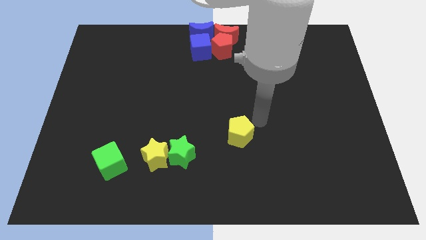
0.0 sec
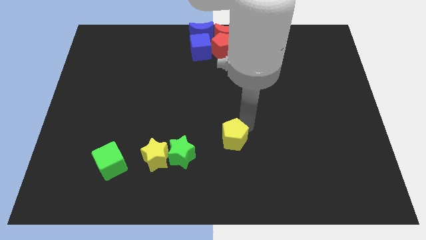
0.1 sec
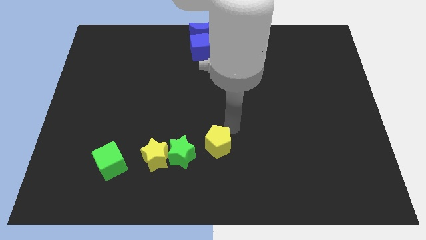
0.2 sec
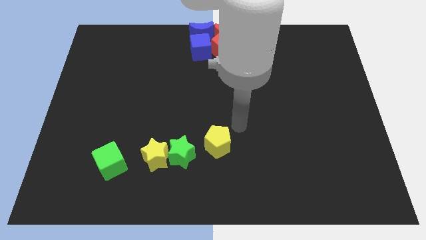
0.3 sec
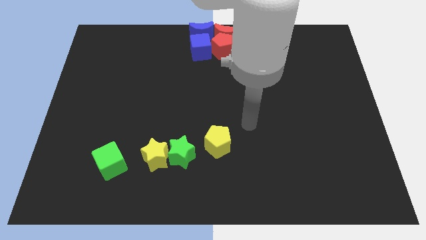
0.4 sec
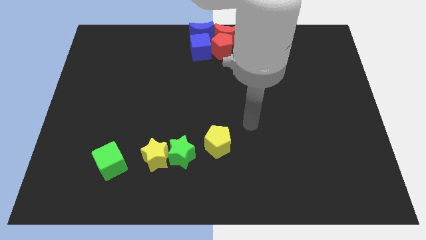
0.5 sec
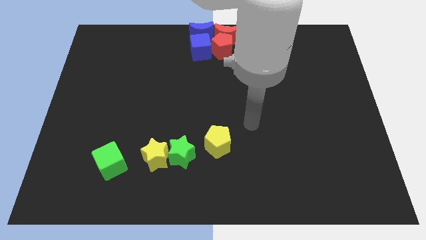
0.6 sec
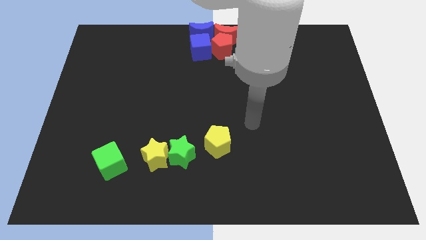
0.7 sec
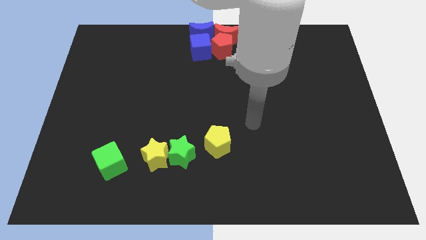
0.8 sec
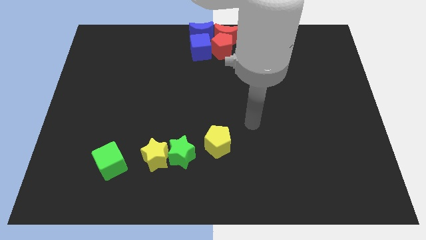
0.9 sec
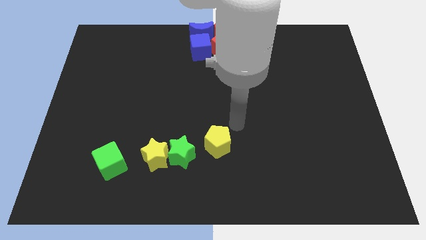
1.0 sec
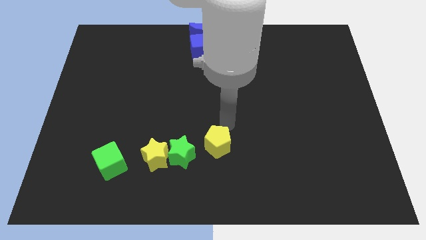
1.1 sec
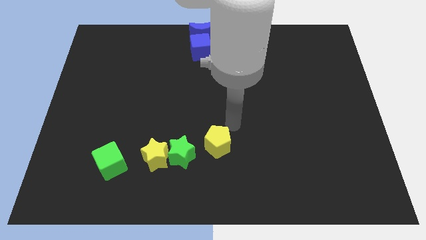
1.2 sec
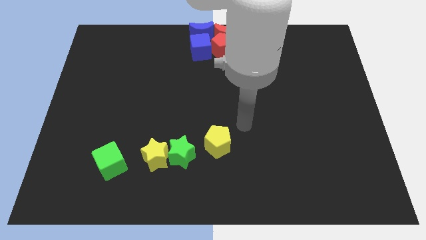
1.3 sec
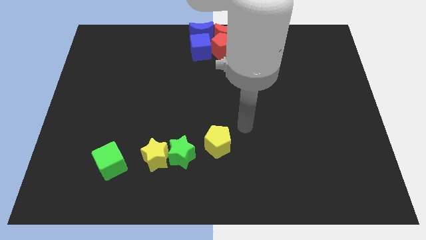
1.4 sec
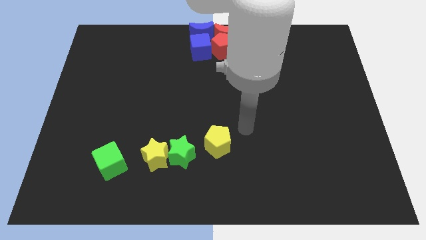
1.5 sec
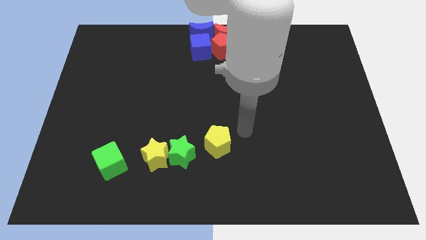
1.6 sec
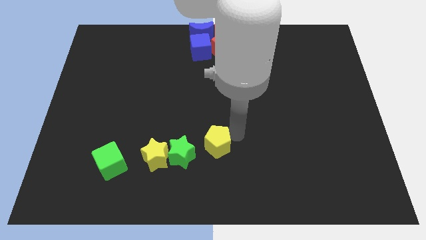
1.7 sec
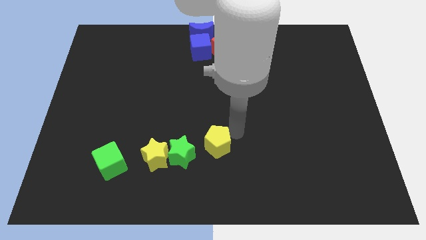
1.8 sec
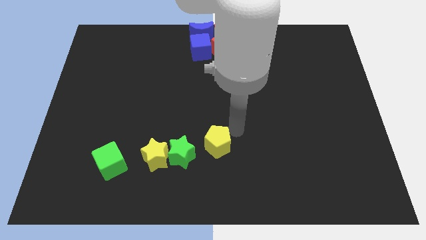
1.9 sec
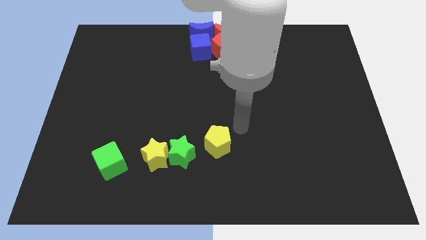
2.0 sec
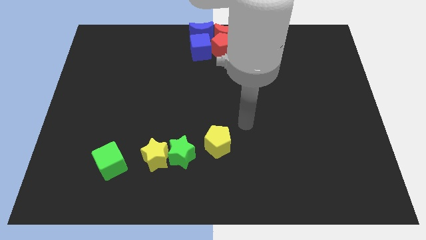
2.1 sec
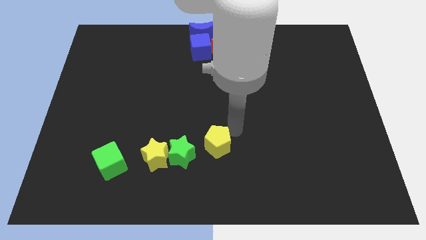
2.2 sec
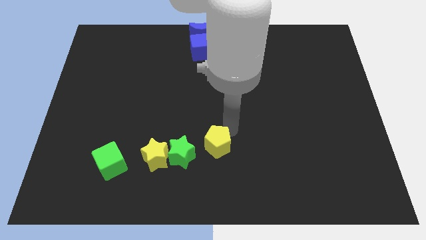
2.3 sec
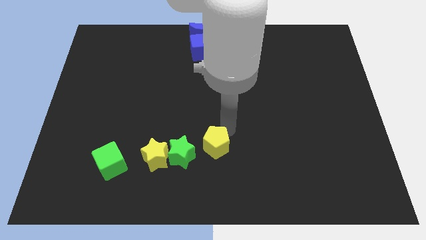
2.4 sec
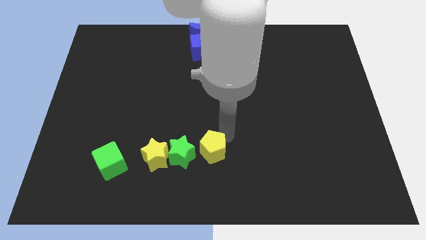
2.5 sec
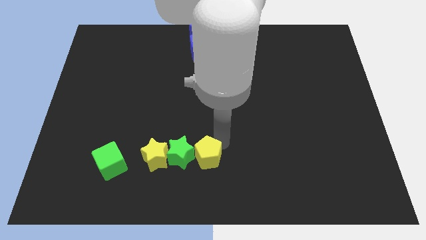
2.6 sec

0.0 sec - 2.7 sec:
move the yellow pentagon to the right of the green star

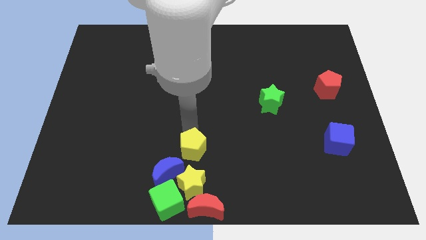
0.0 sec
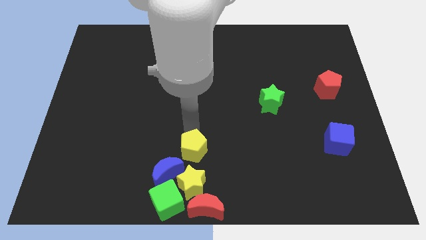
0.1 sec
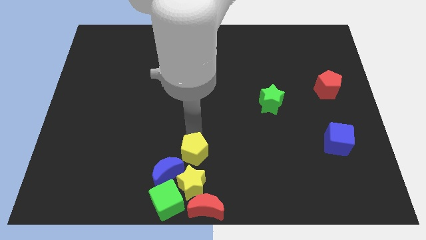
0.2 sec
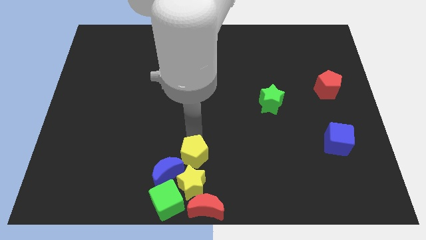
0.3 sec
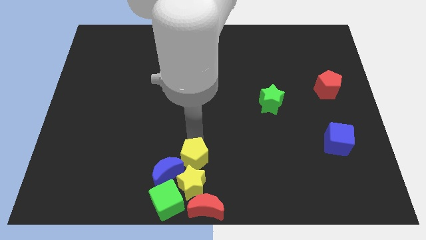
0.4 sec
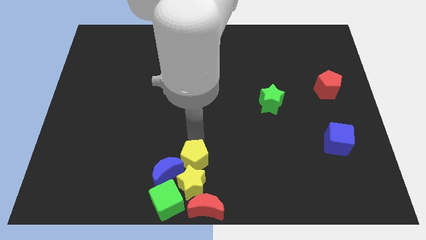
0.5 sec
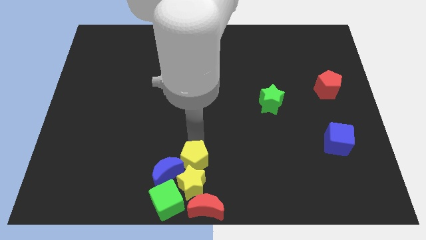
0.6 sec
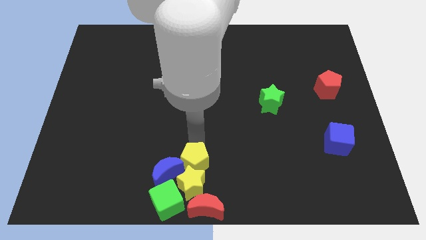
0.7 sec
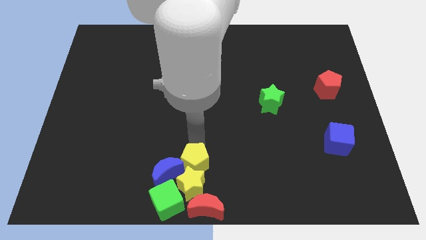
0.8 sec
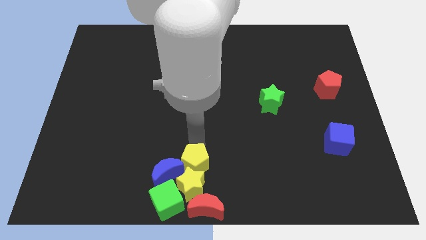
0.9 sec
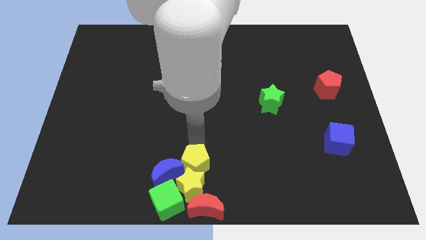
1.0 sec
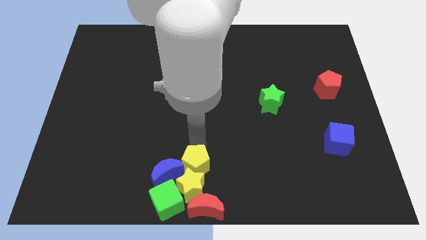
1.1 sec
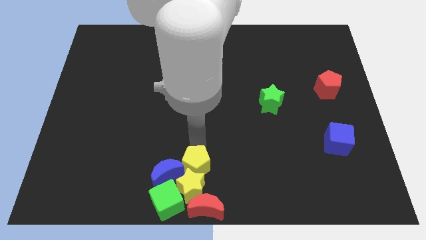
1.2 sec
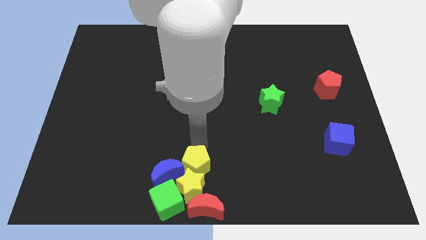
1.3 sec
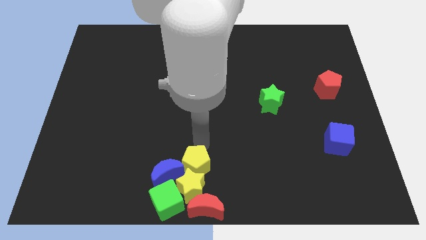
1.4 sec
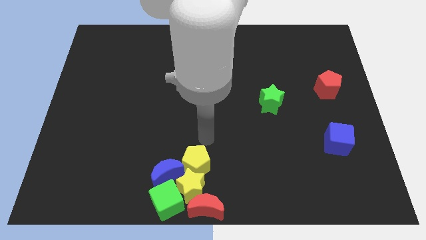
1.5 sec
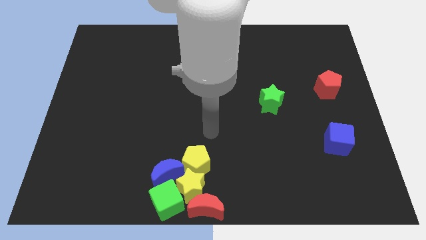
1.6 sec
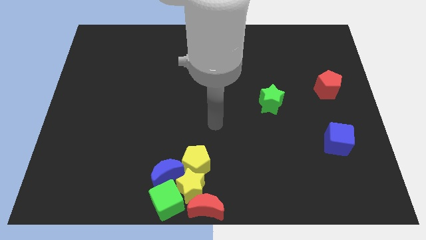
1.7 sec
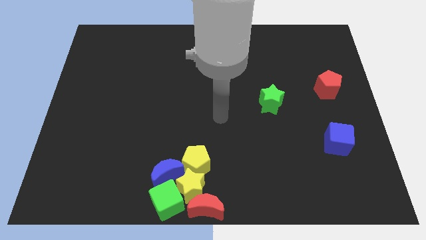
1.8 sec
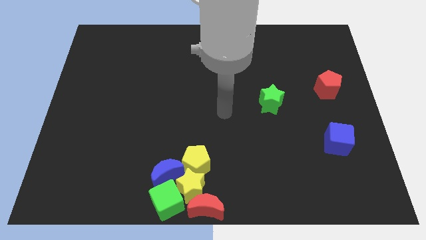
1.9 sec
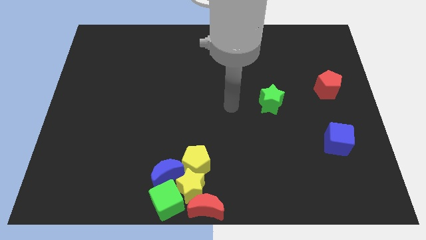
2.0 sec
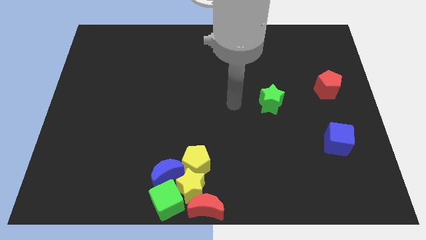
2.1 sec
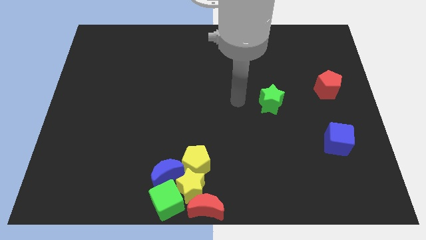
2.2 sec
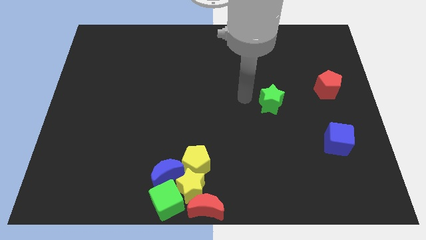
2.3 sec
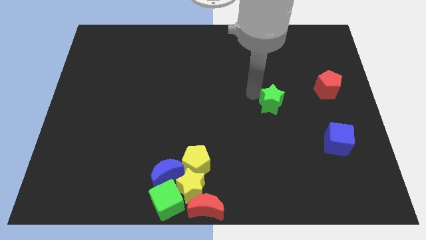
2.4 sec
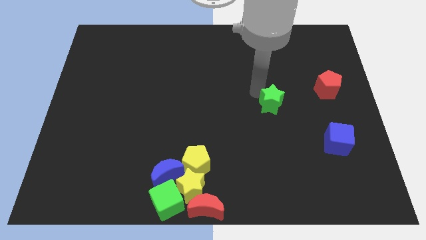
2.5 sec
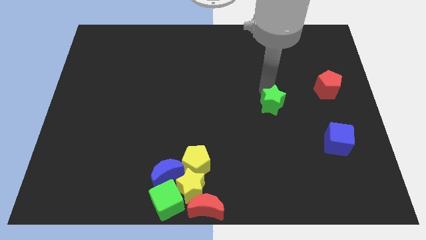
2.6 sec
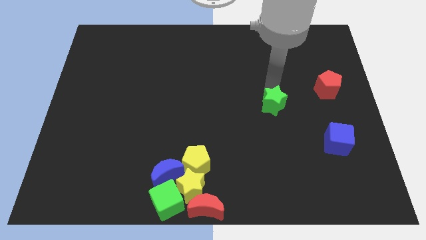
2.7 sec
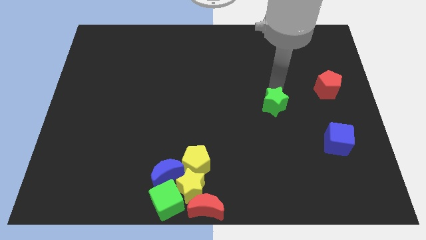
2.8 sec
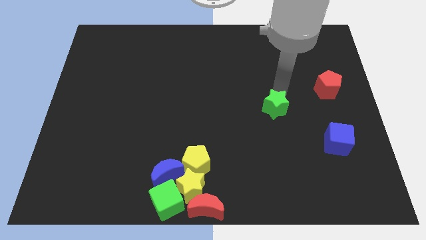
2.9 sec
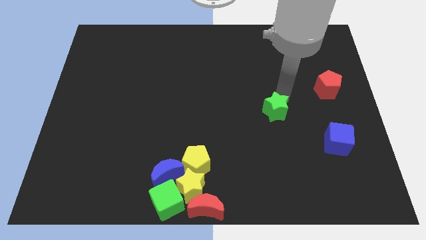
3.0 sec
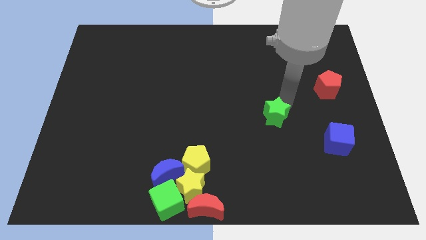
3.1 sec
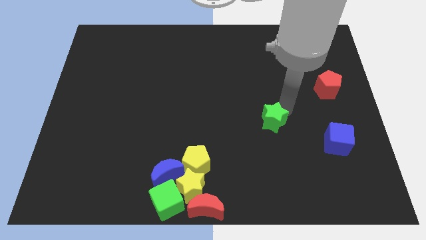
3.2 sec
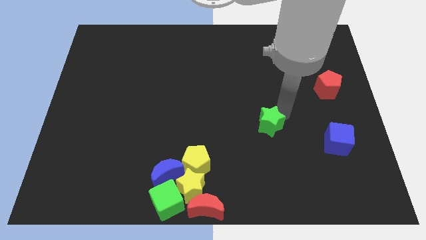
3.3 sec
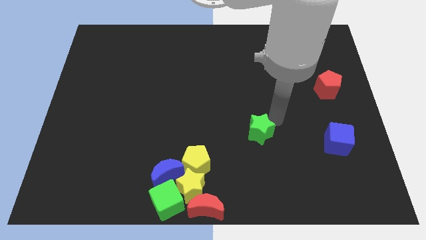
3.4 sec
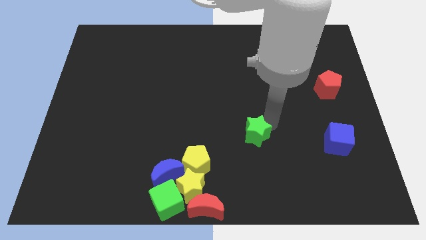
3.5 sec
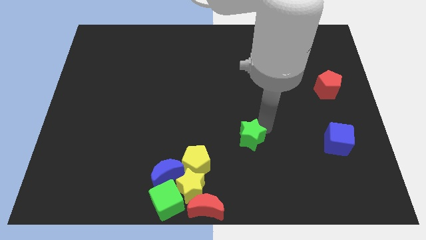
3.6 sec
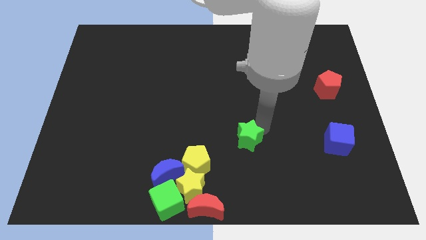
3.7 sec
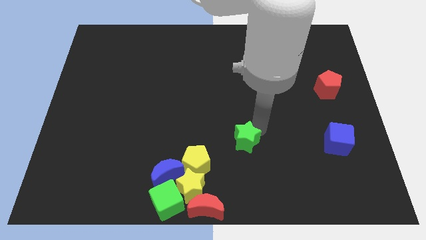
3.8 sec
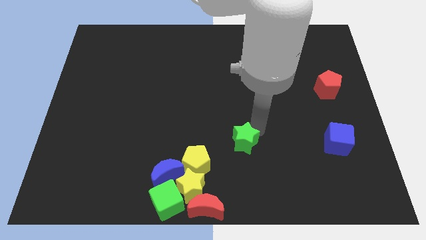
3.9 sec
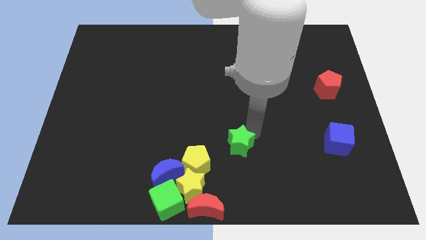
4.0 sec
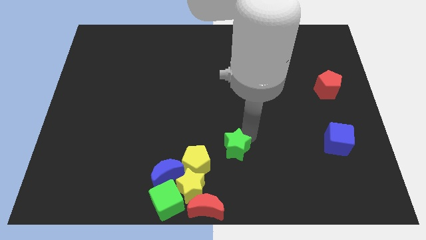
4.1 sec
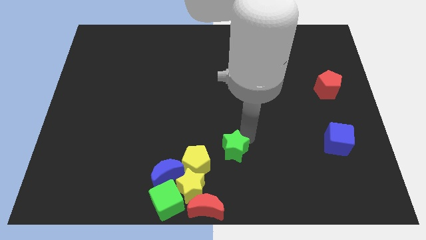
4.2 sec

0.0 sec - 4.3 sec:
push the green star towards the yellow pentagon

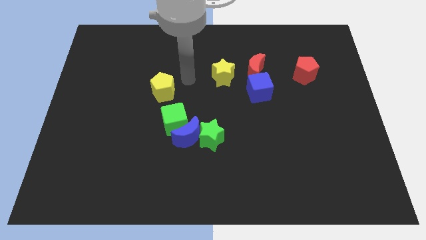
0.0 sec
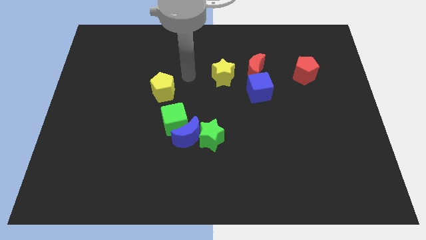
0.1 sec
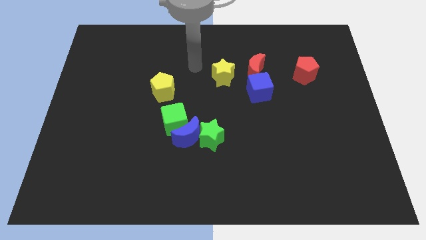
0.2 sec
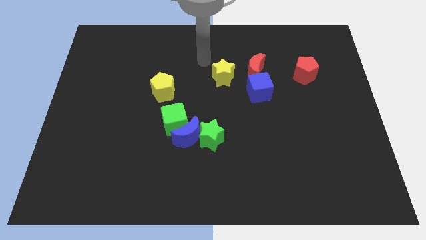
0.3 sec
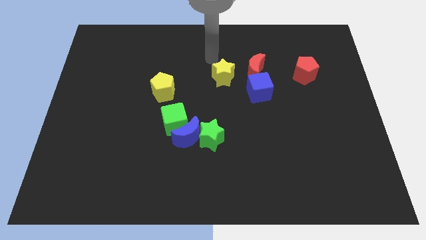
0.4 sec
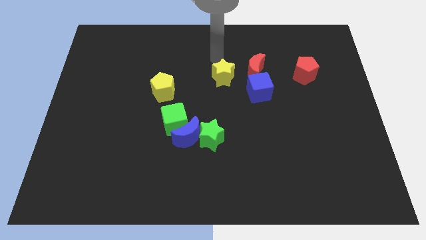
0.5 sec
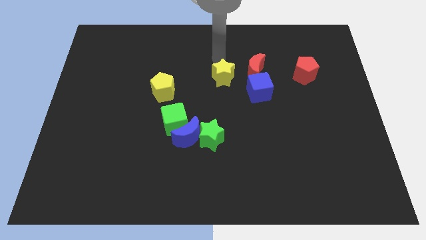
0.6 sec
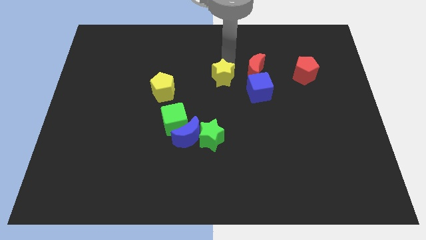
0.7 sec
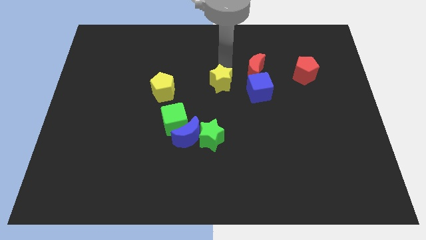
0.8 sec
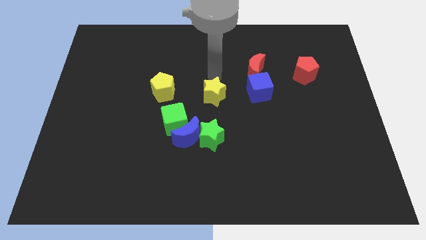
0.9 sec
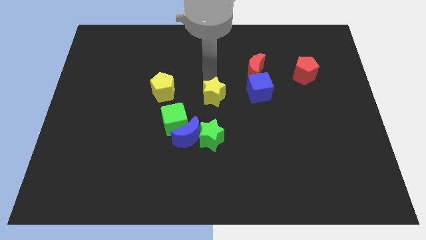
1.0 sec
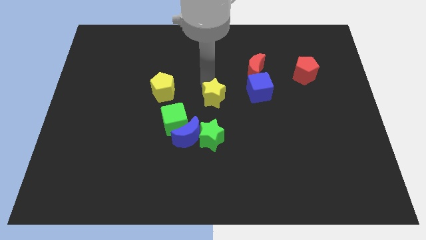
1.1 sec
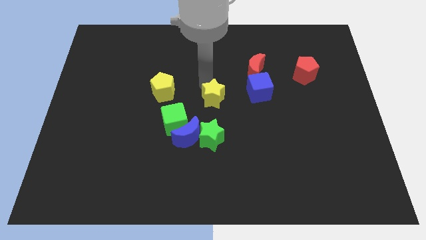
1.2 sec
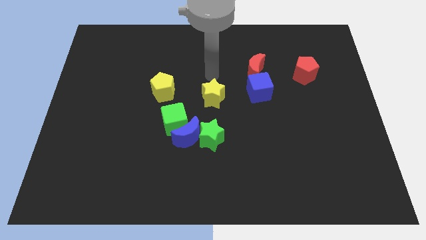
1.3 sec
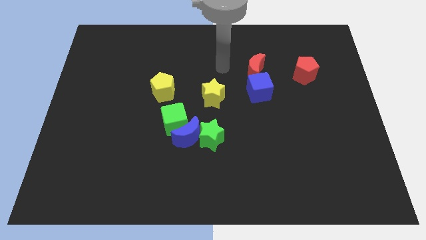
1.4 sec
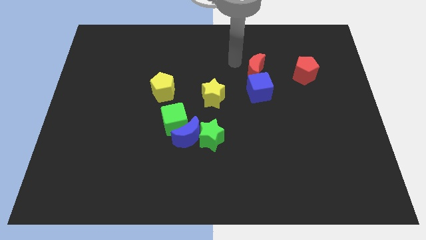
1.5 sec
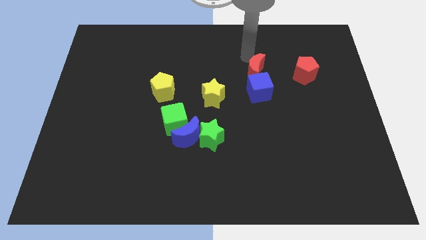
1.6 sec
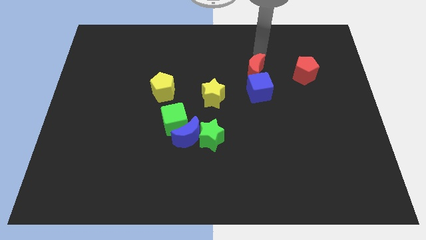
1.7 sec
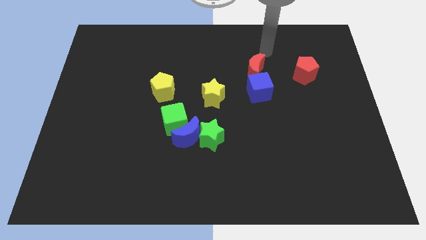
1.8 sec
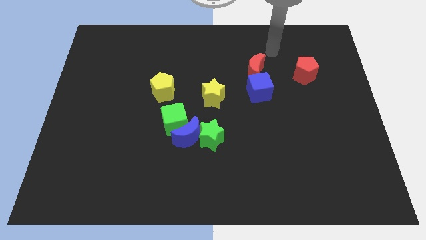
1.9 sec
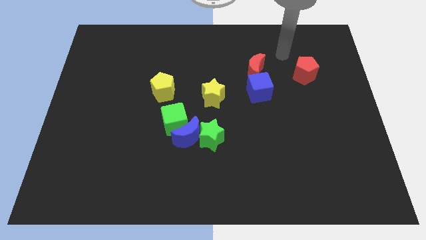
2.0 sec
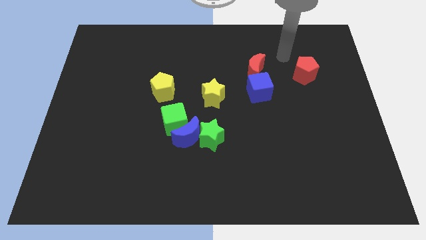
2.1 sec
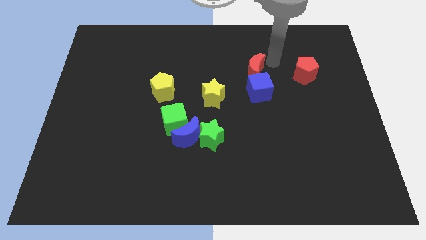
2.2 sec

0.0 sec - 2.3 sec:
push the yellow star above green star
